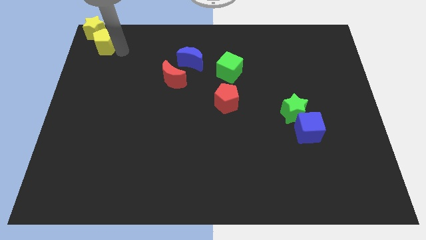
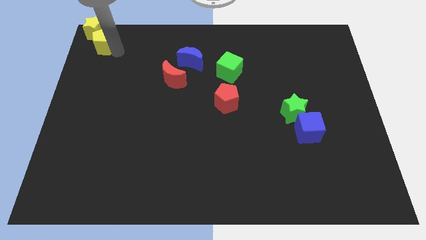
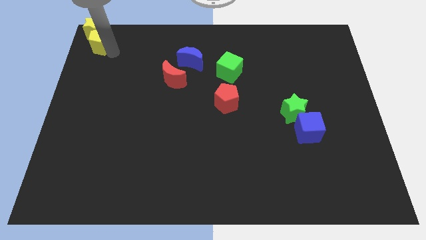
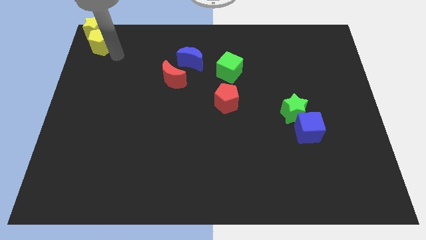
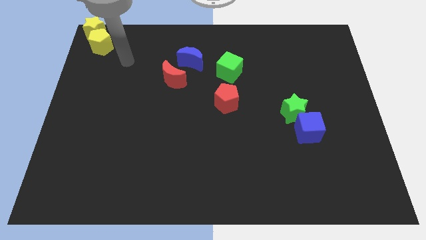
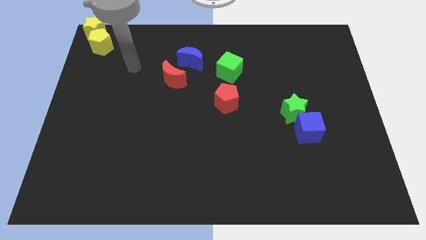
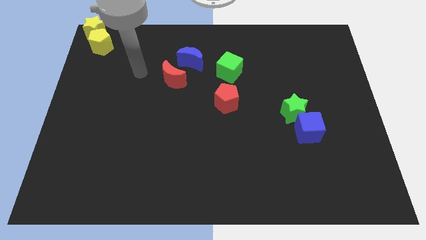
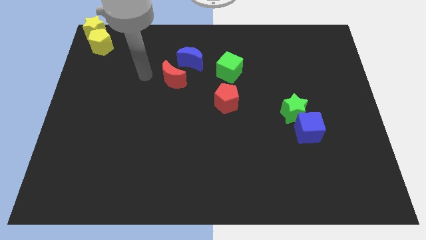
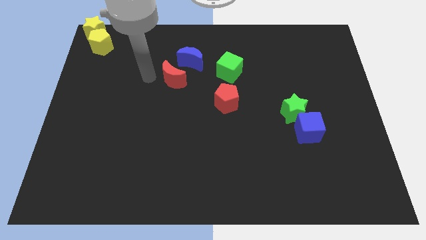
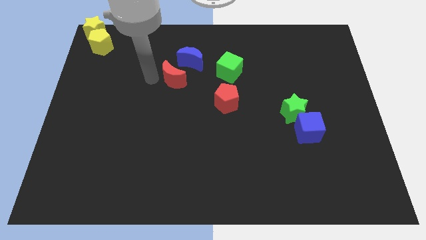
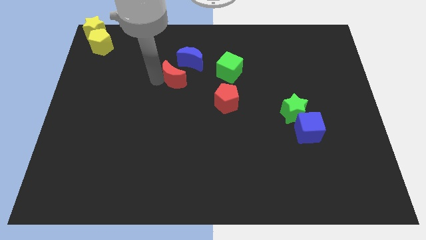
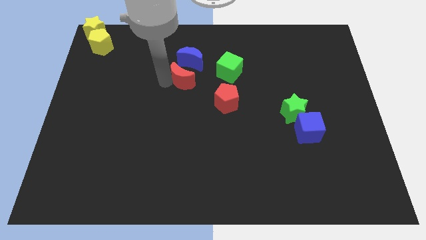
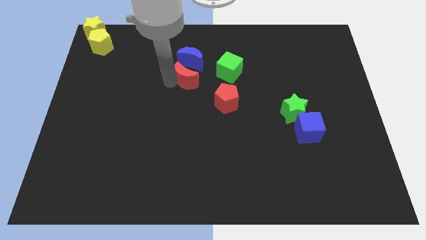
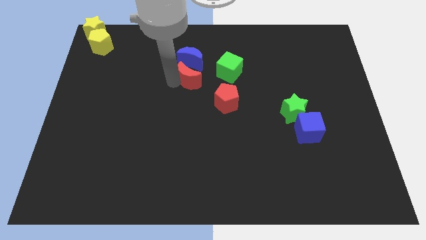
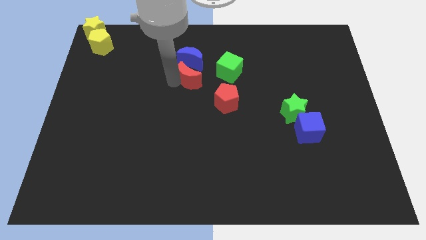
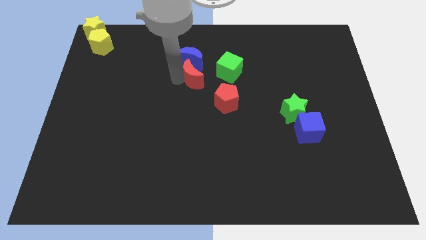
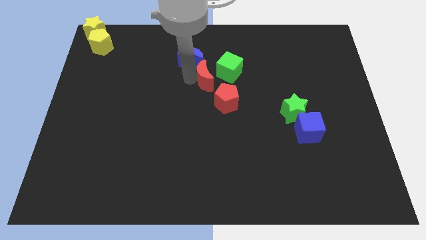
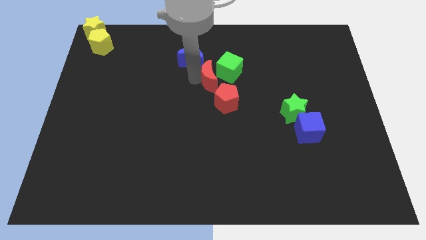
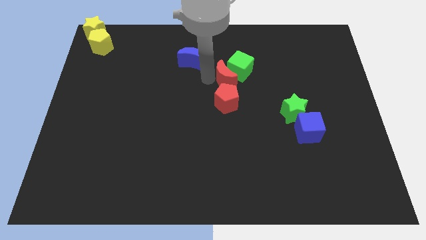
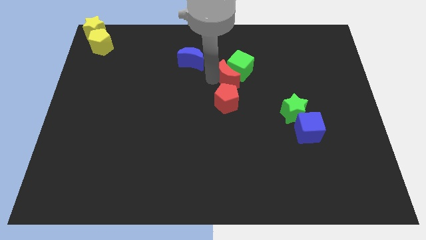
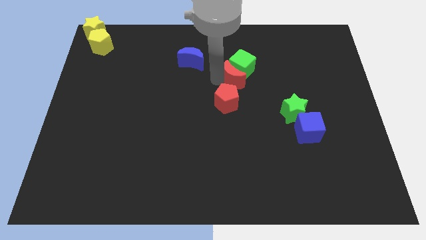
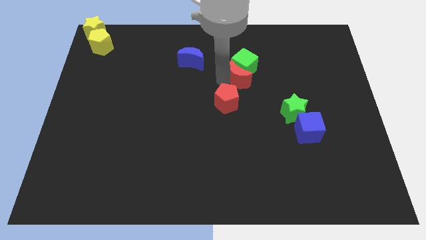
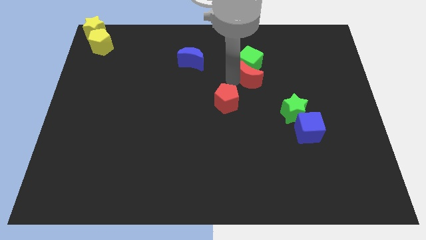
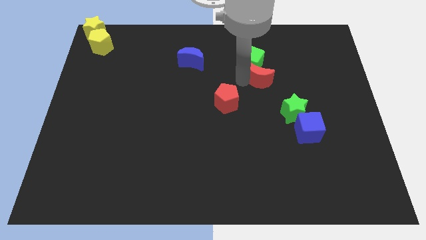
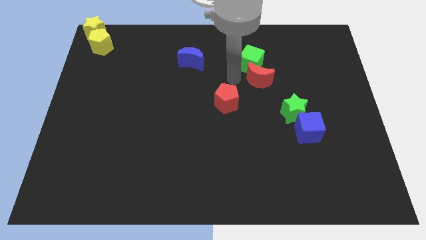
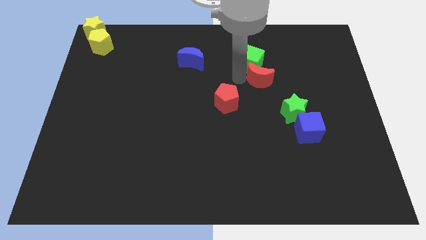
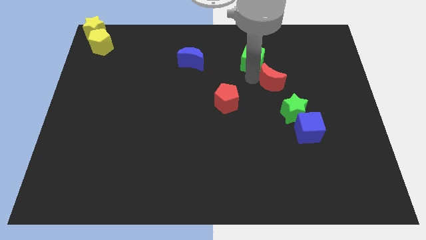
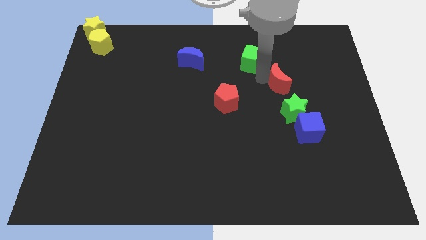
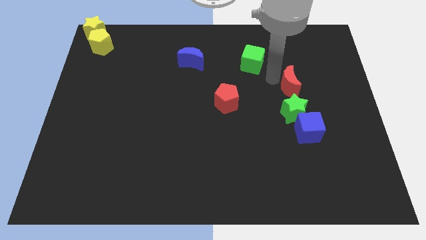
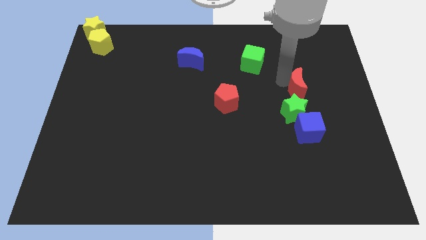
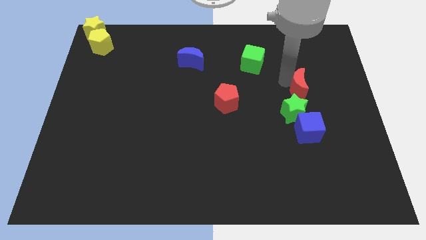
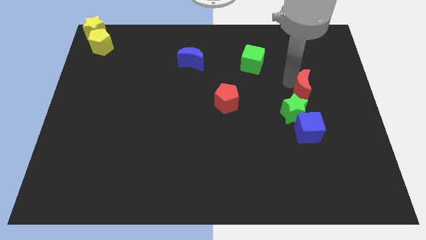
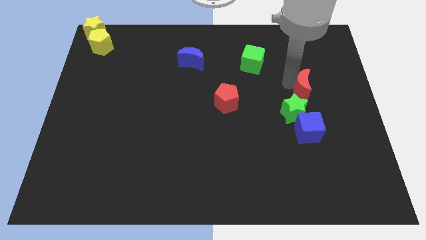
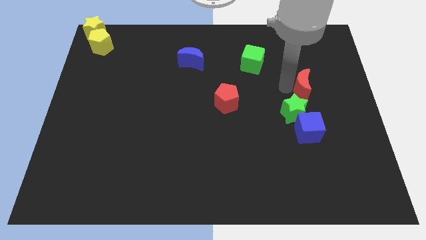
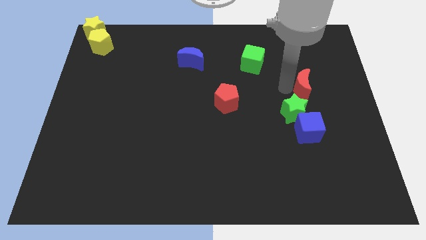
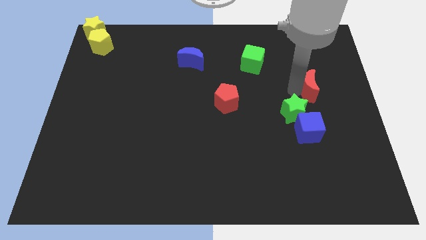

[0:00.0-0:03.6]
place the red moon diagonally top right to green star

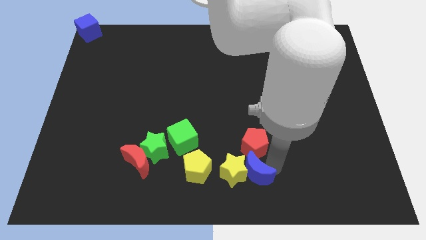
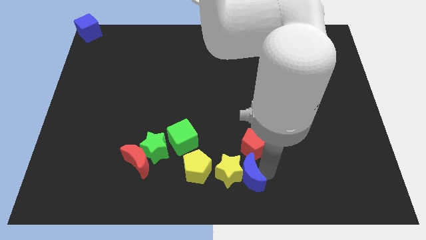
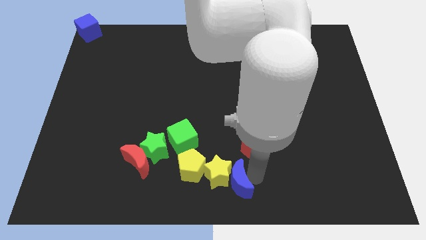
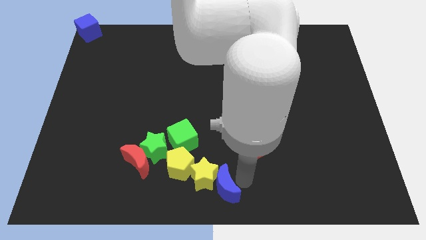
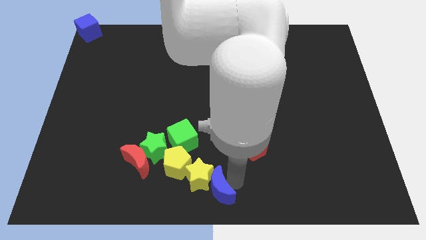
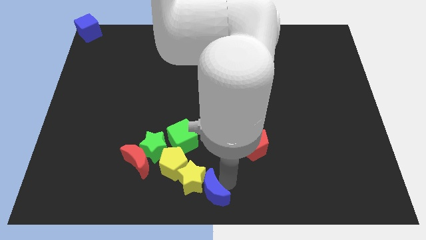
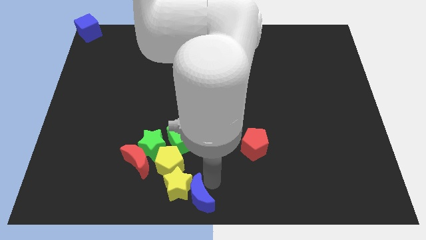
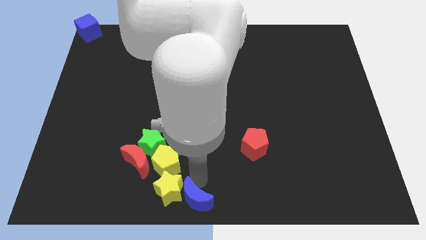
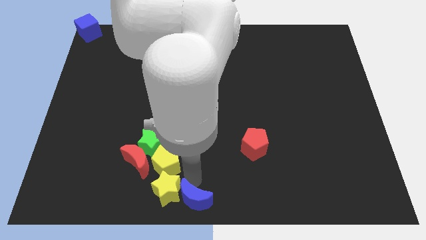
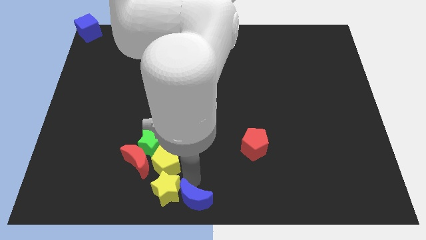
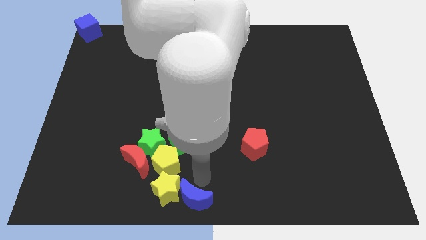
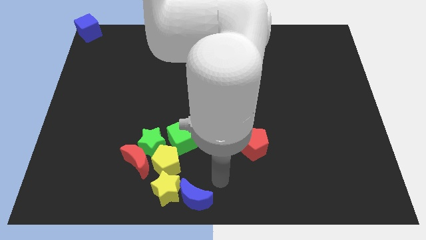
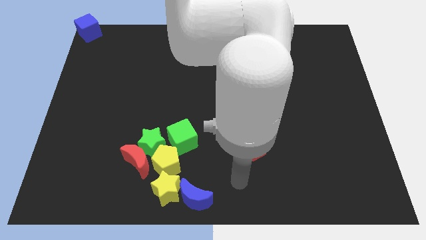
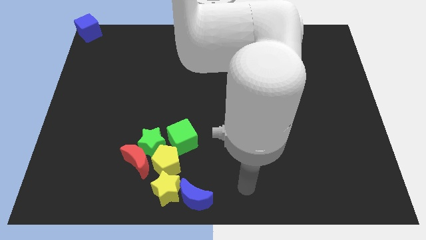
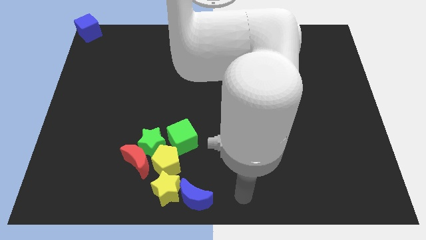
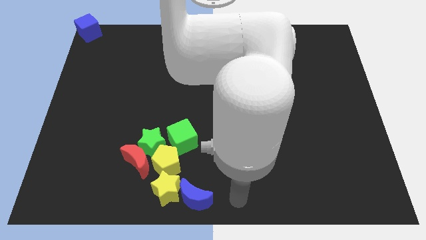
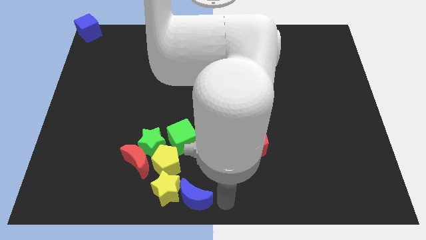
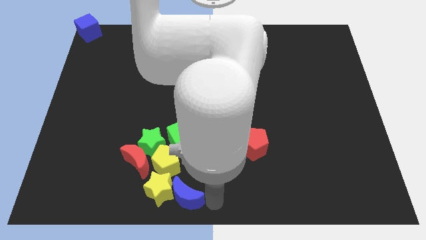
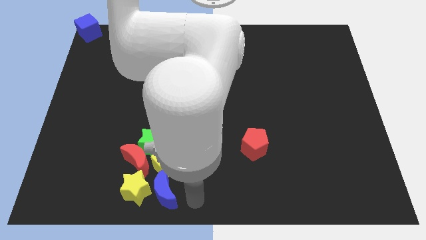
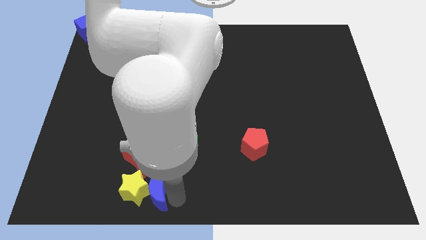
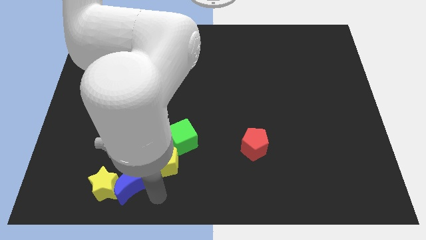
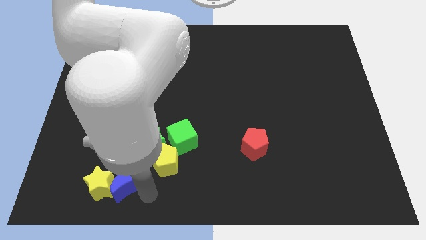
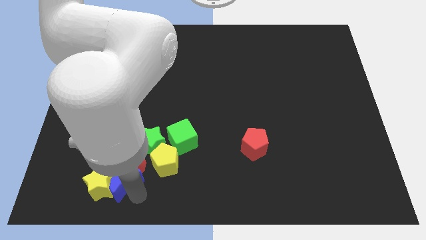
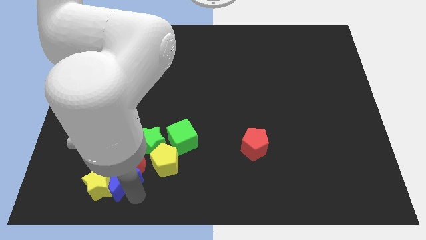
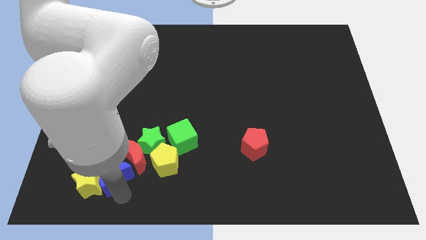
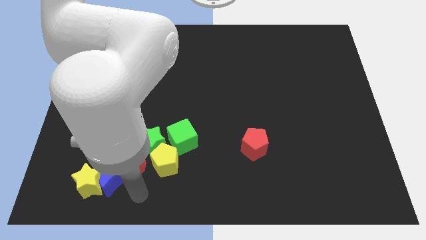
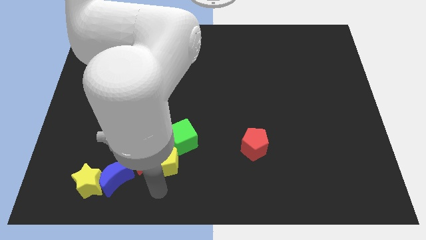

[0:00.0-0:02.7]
slide the yellow star and the blue moon to the left

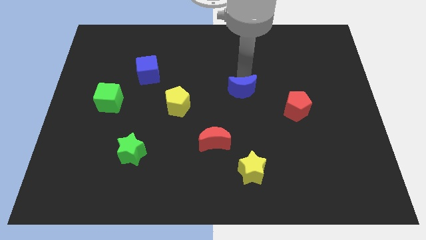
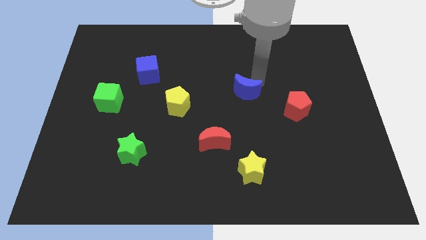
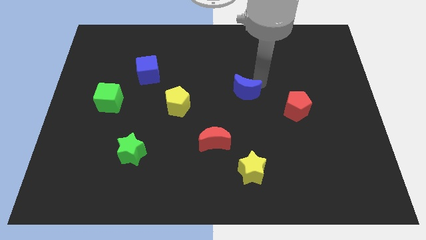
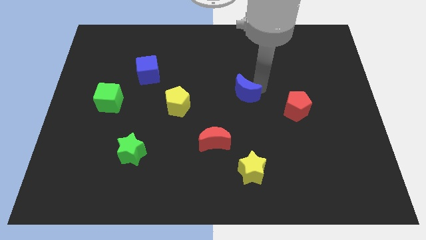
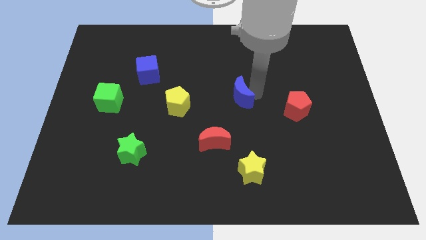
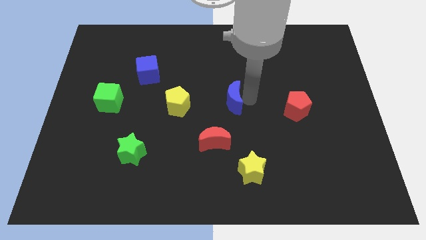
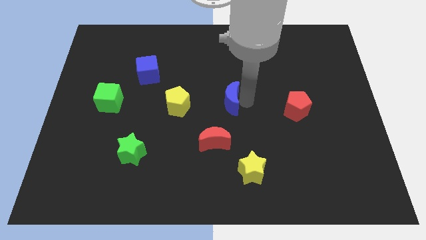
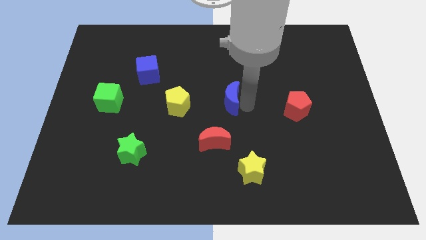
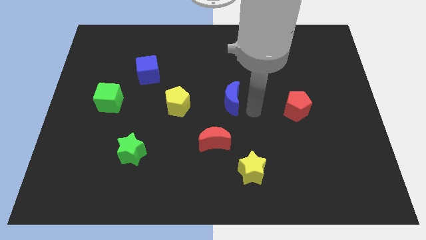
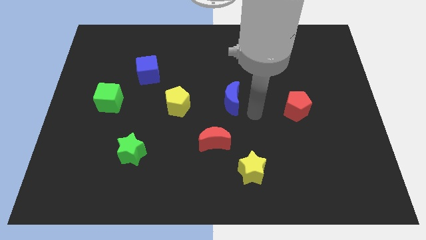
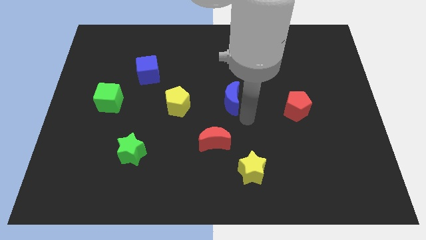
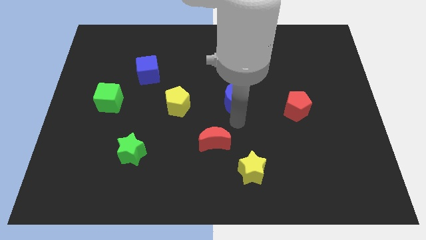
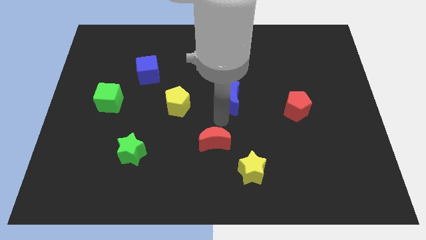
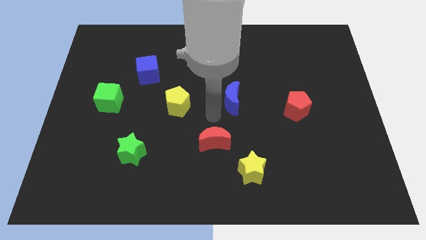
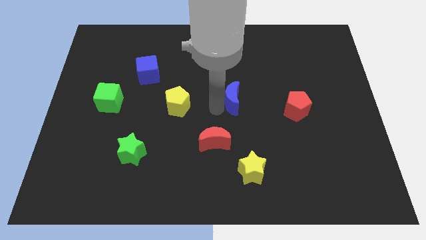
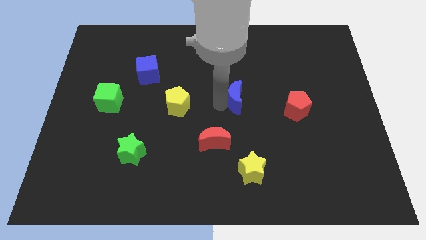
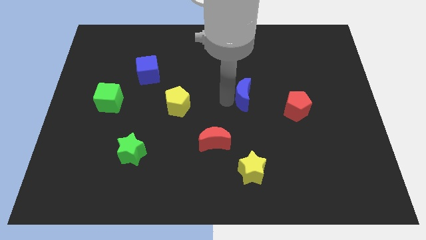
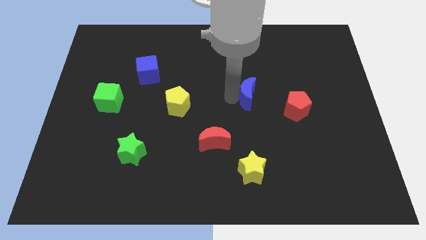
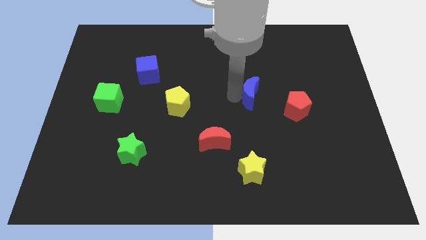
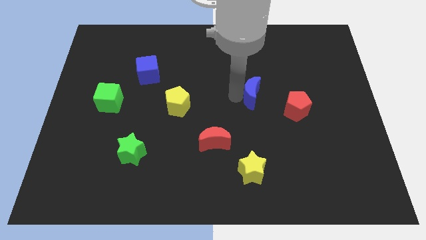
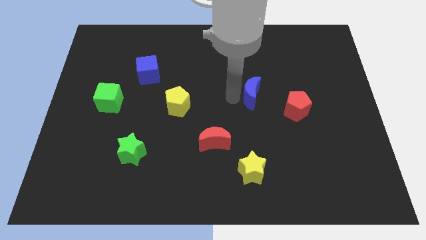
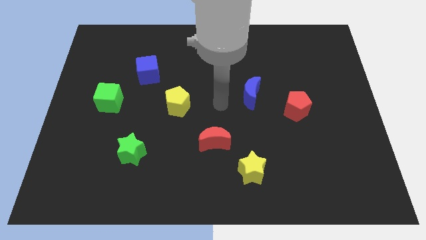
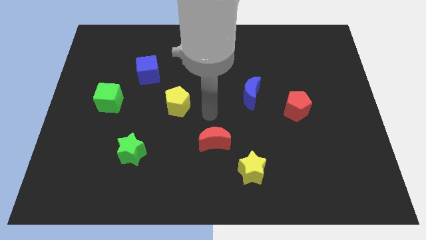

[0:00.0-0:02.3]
place blue moon parallel to yellow pentagon

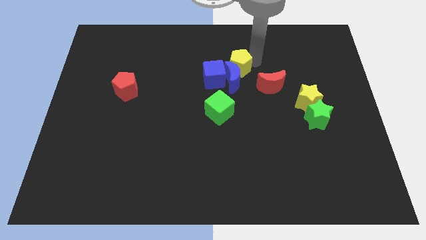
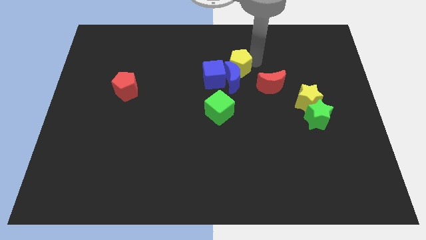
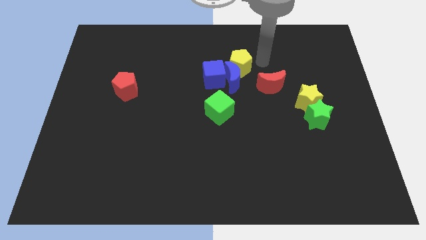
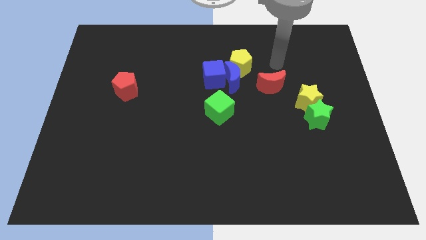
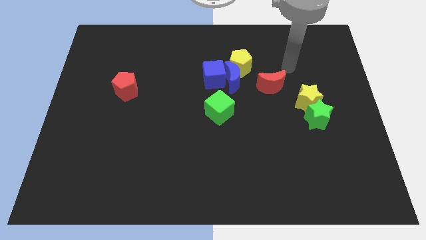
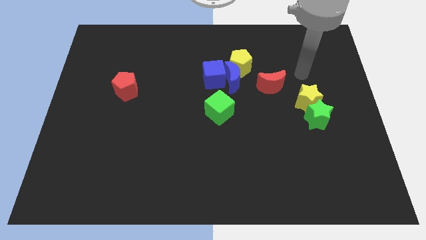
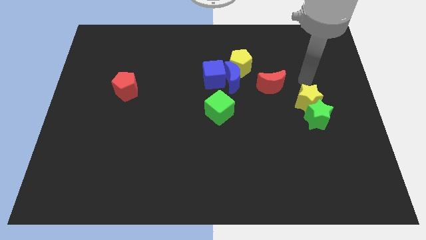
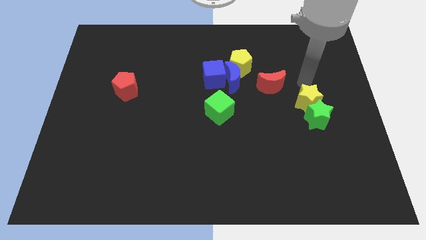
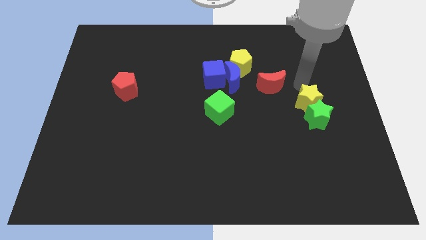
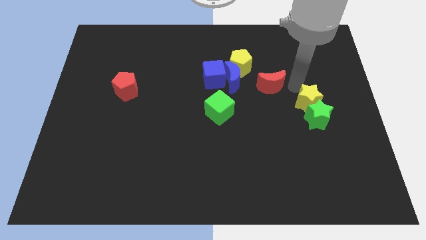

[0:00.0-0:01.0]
move your arm away from yellow pentagon
